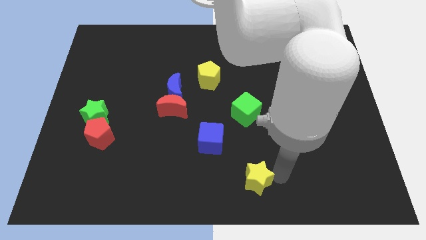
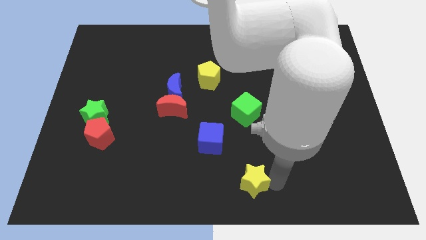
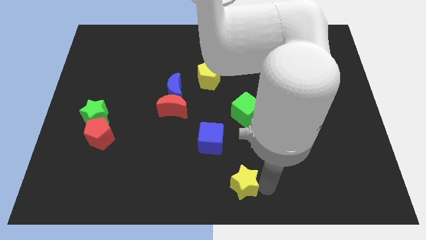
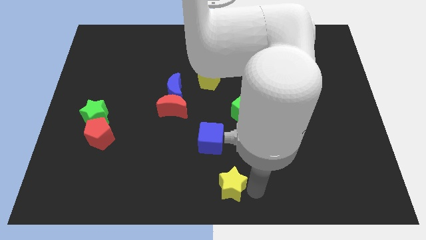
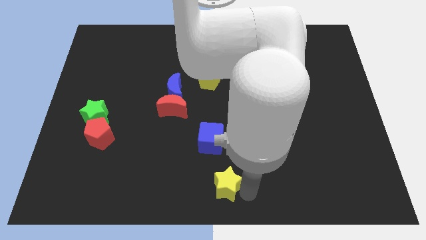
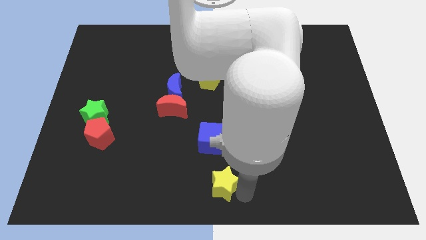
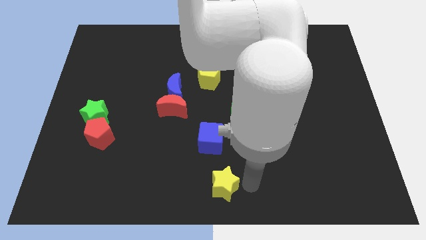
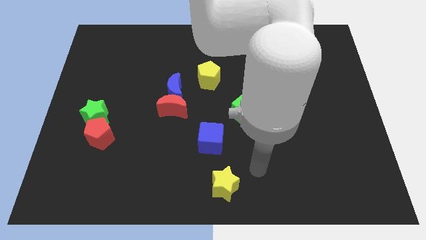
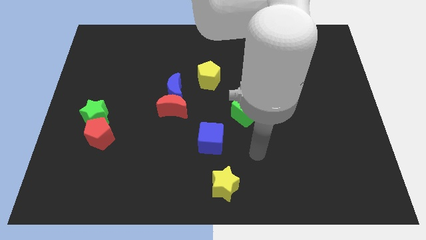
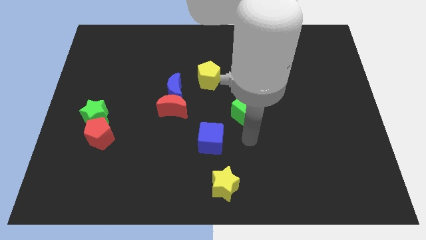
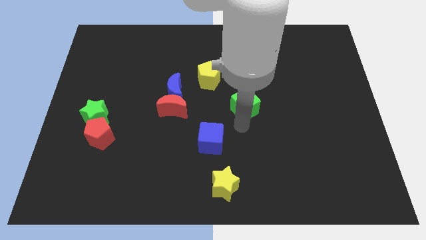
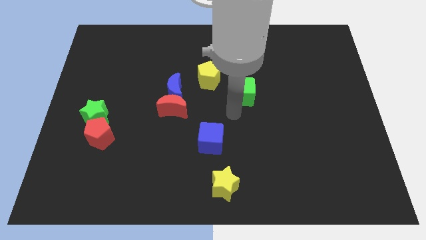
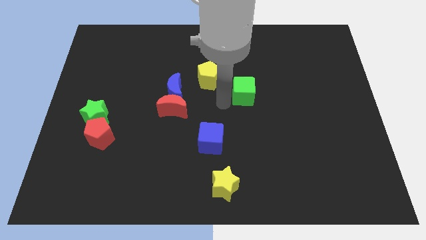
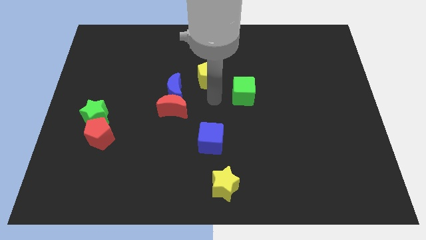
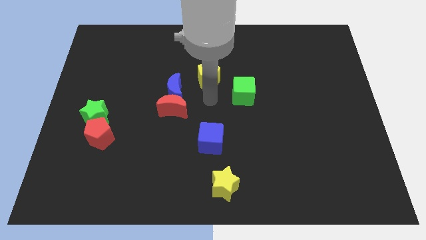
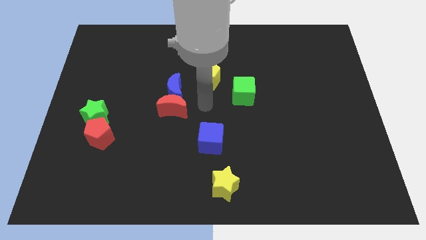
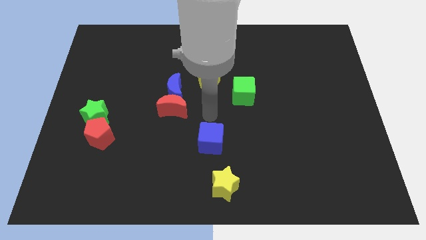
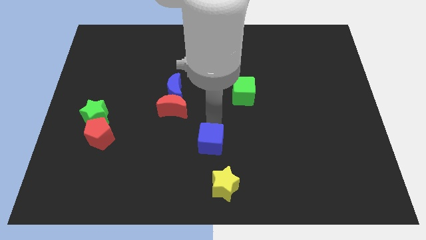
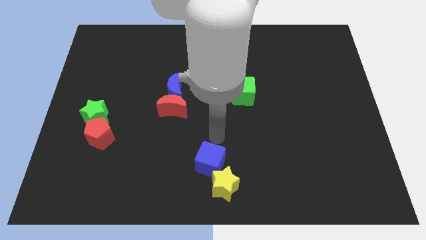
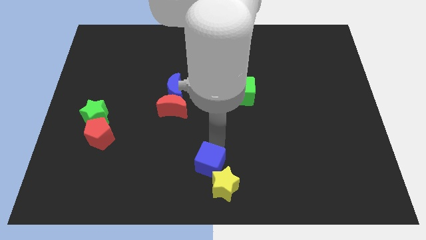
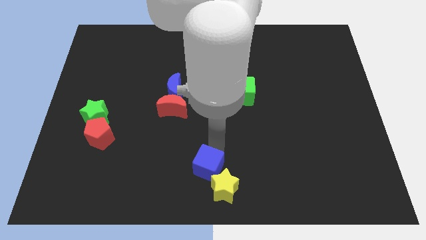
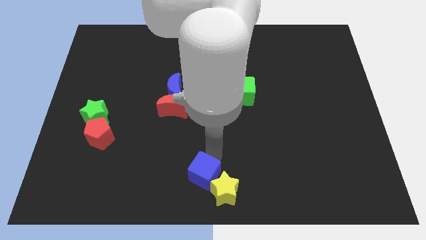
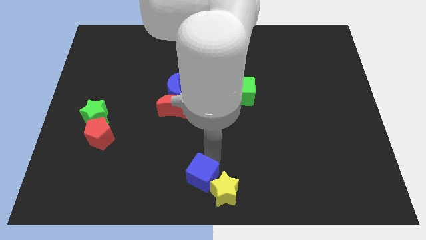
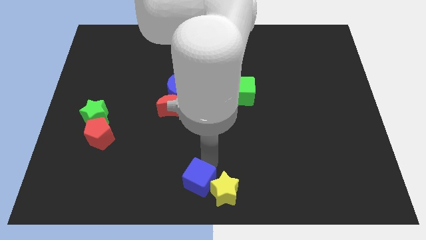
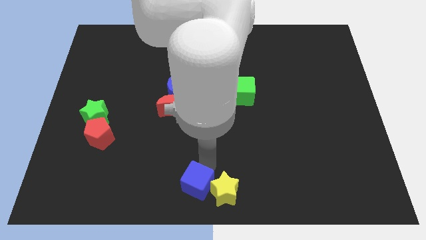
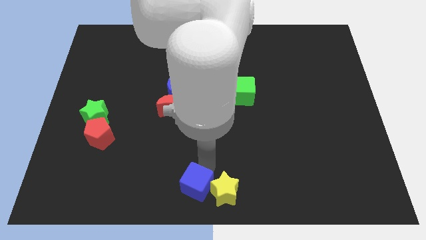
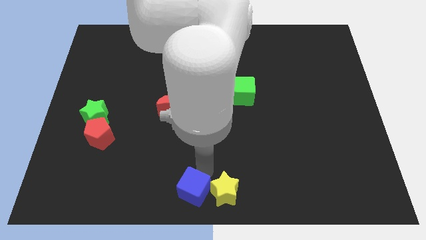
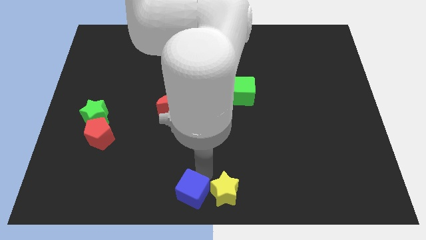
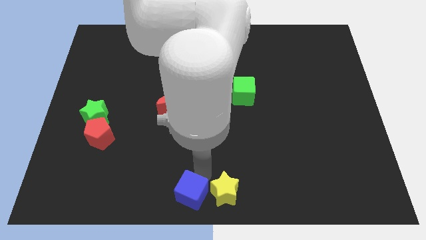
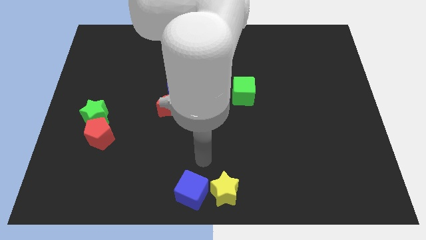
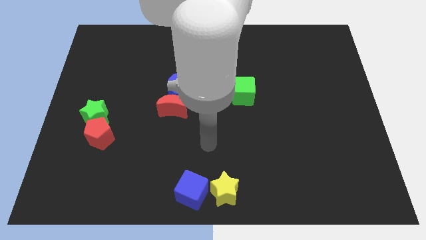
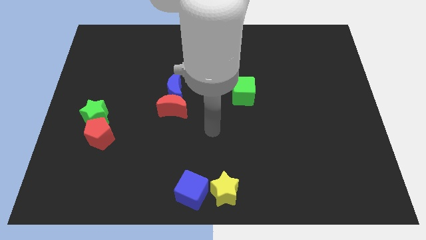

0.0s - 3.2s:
push the yellow star and blue cube to the bottom center of the board

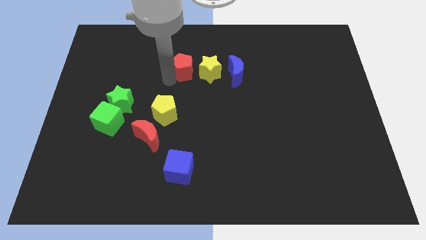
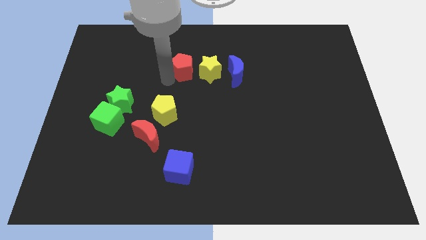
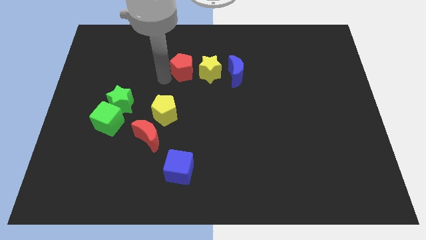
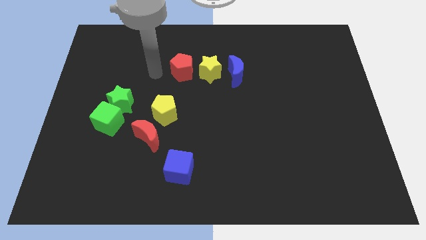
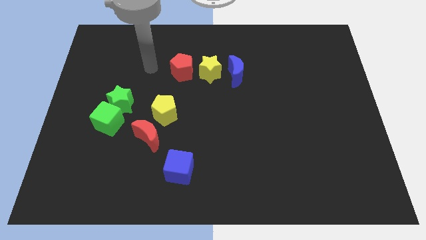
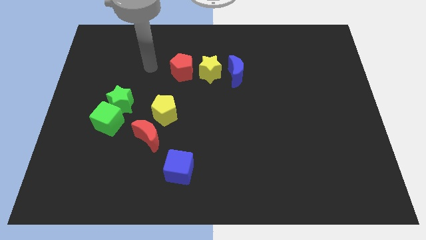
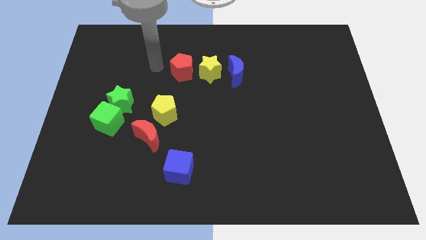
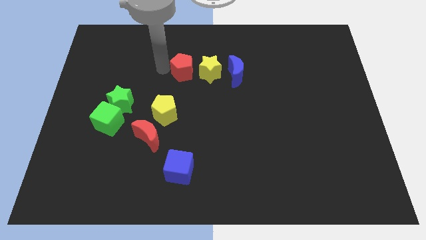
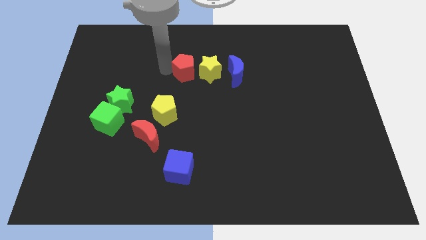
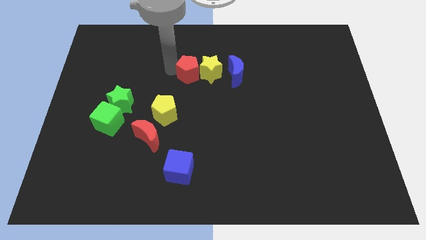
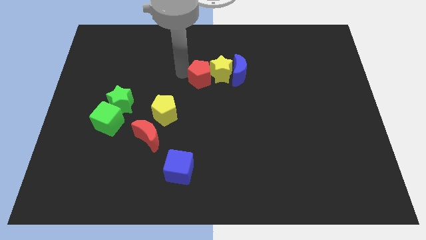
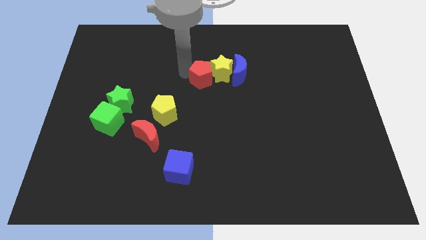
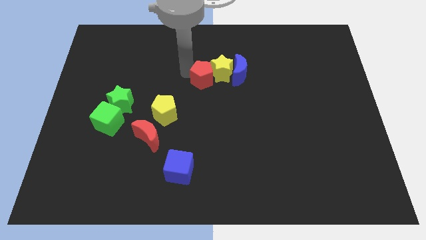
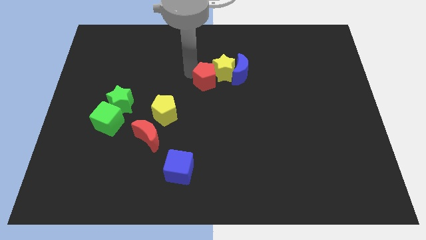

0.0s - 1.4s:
push red pentagon in to yellow star

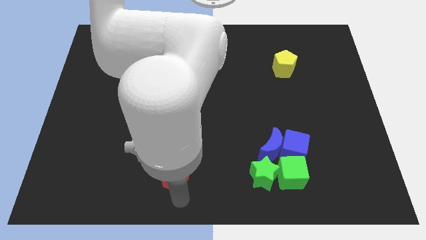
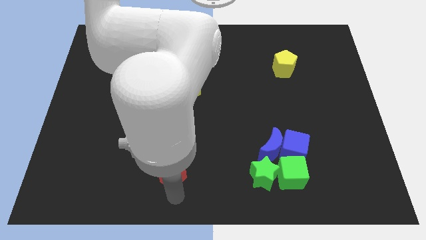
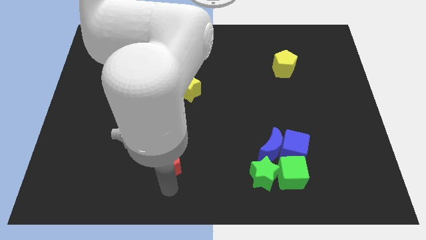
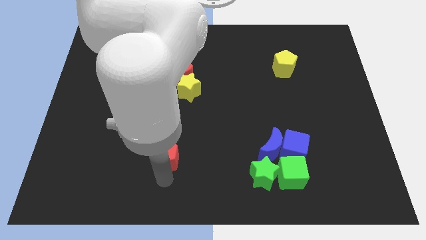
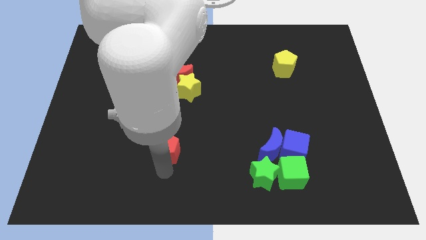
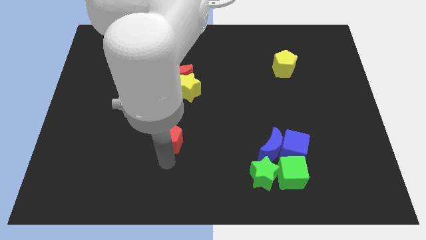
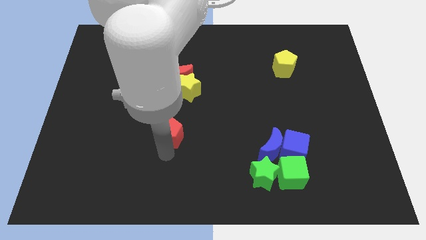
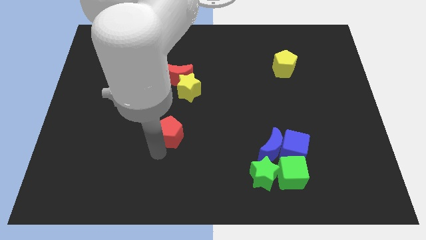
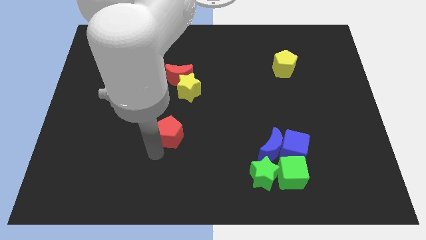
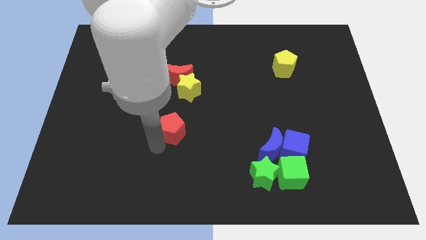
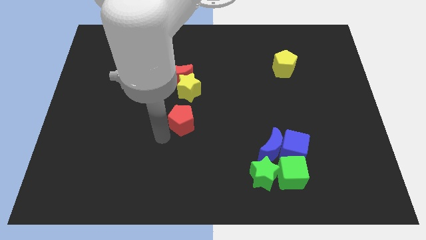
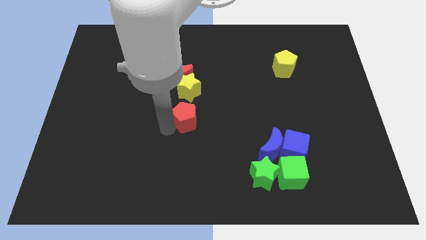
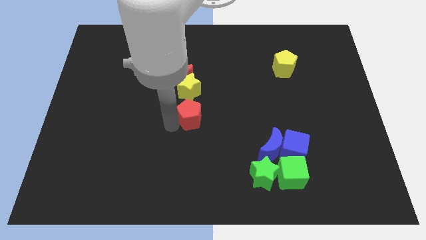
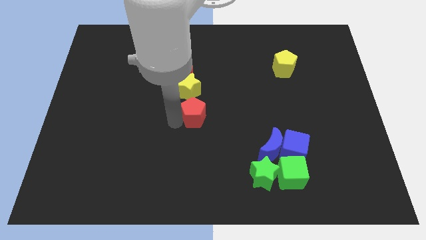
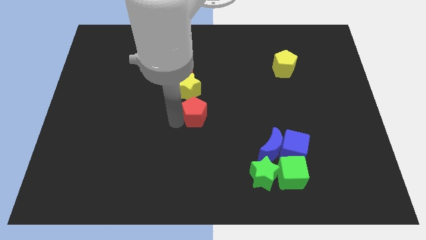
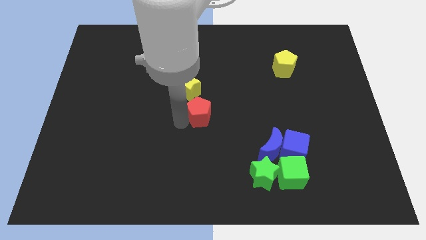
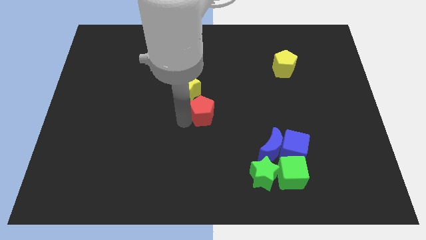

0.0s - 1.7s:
move the red pentagon to the center of the board

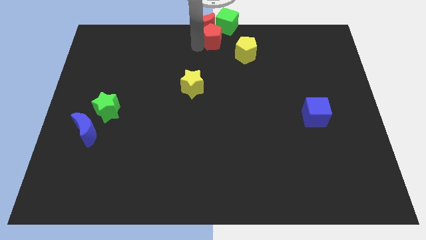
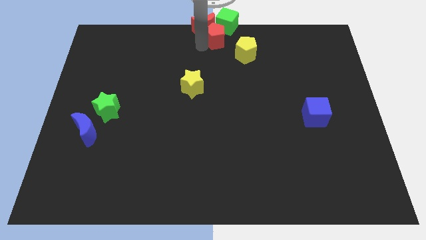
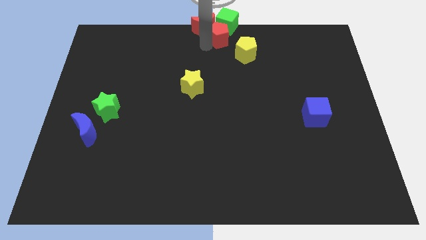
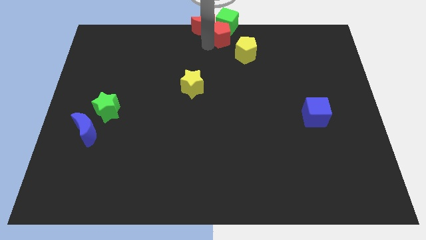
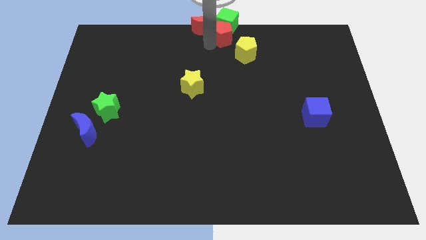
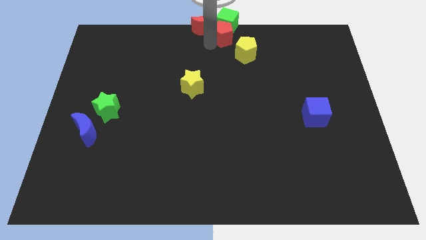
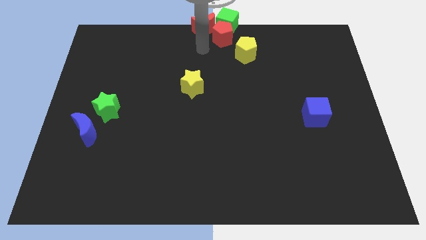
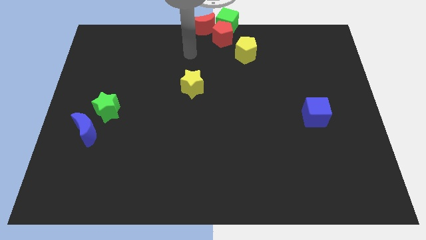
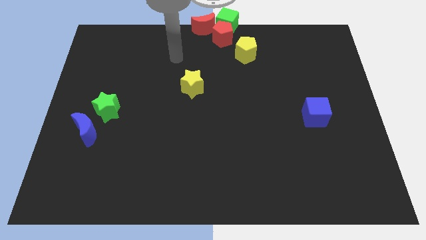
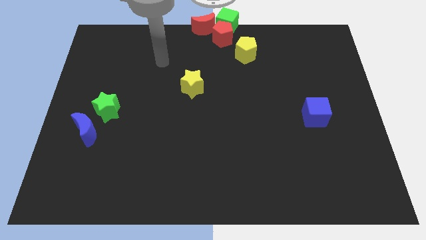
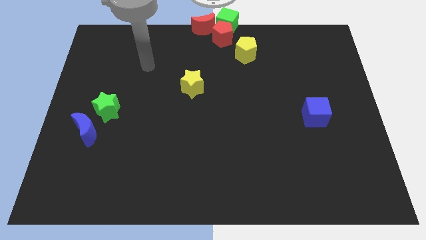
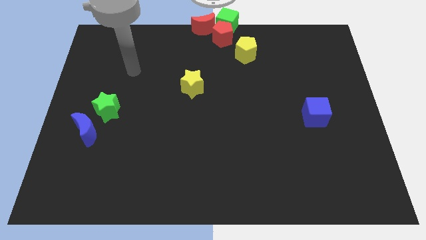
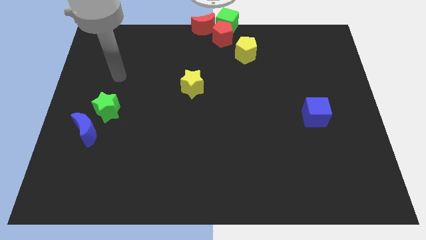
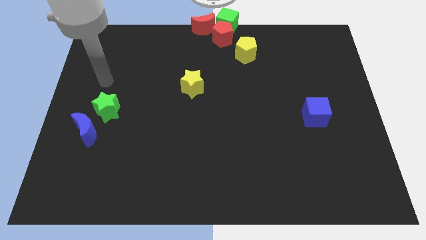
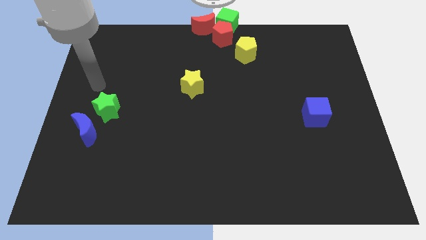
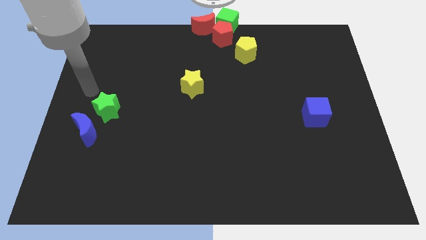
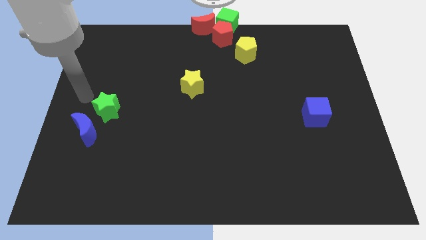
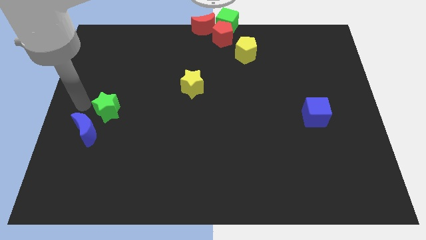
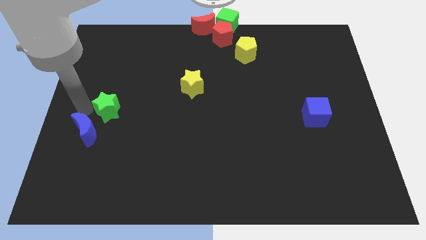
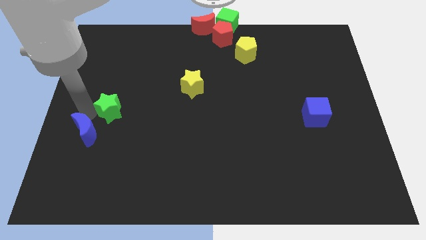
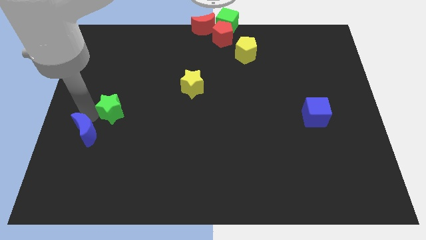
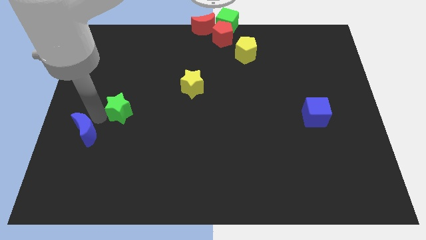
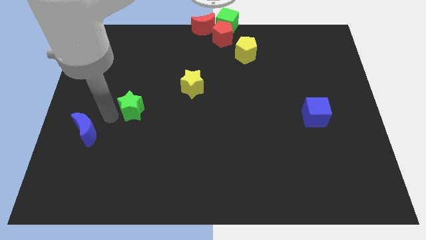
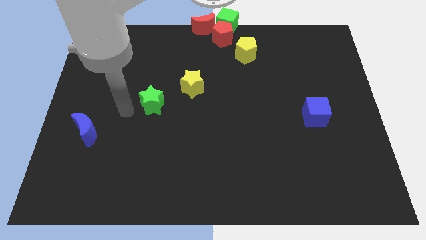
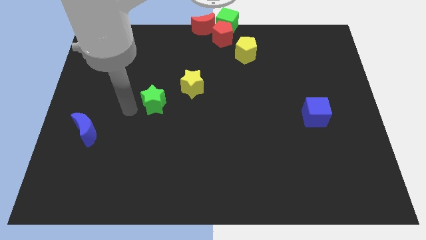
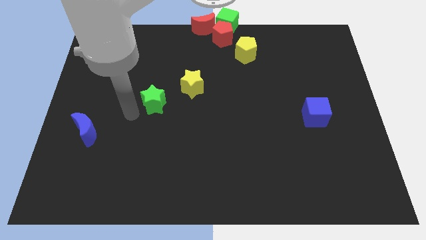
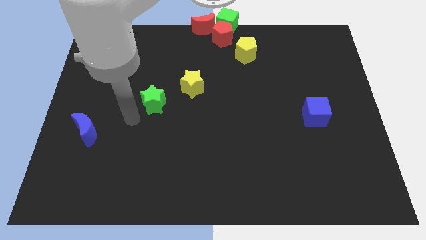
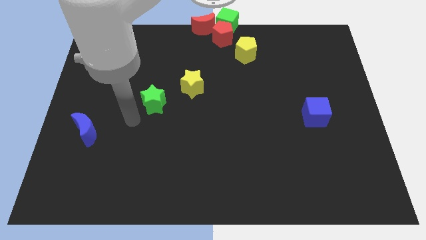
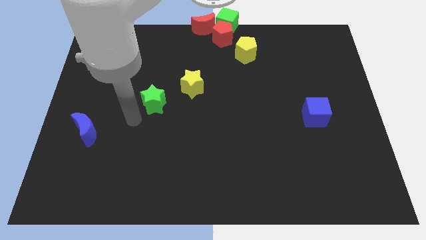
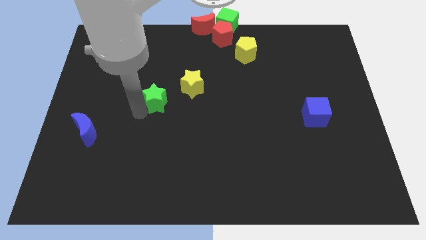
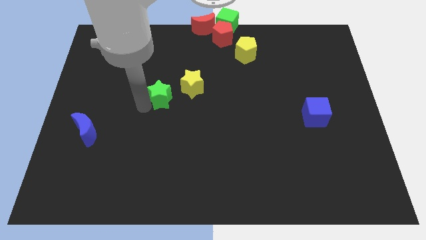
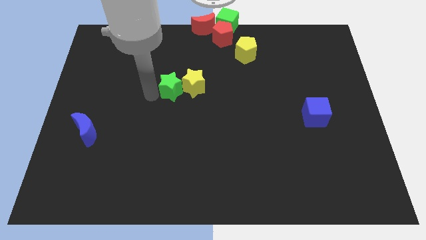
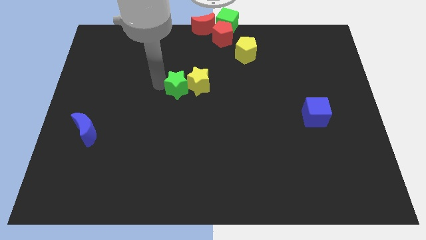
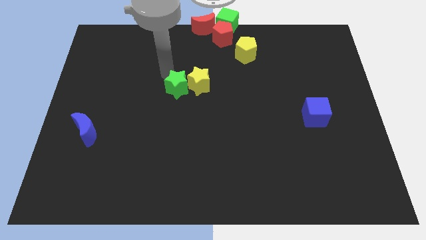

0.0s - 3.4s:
move the green star into the yellow star
